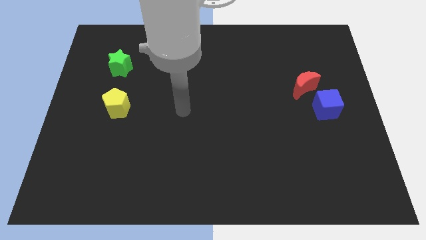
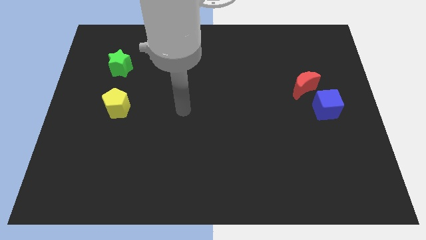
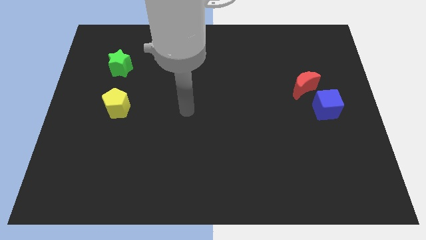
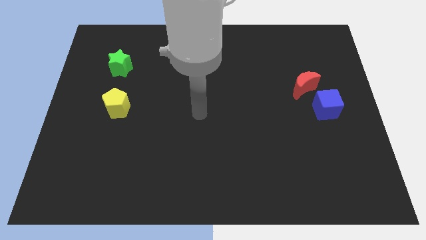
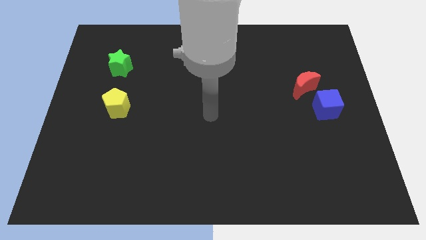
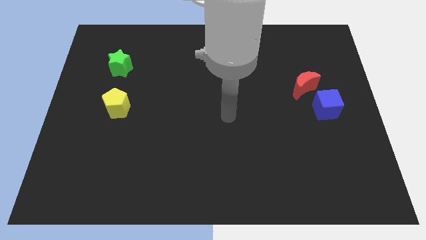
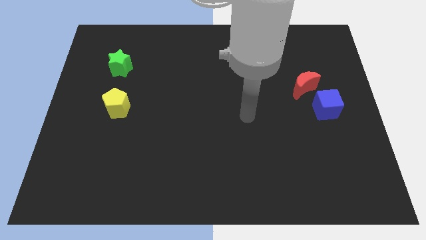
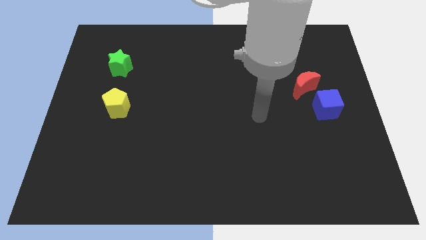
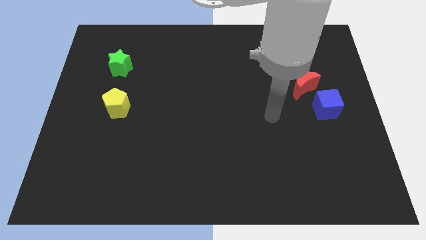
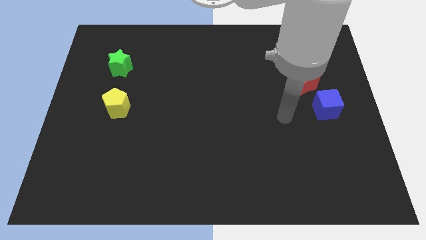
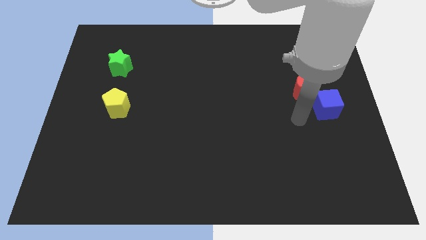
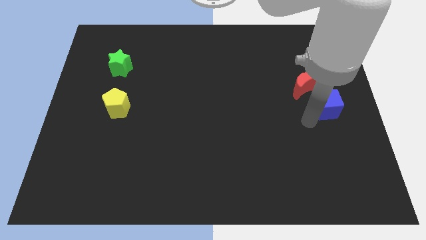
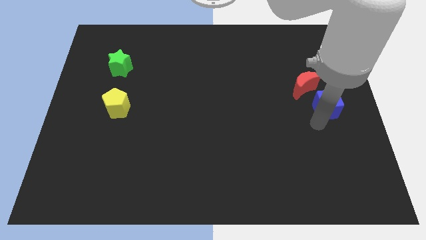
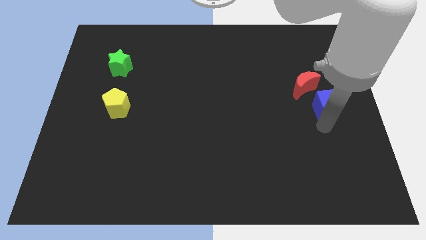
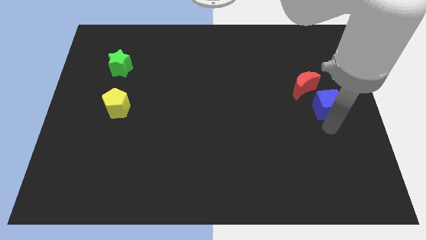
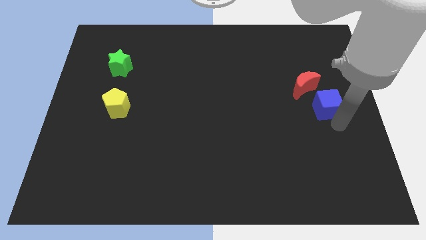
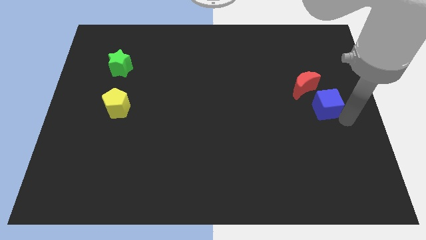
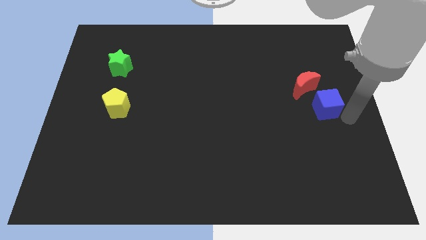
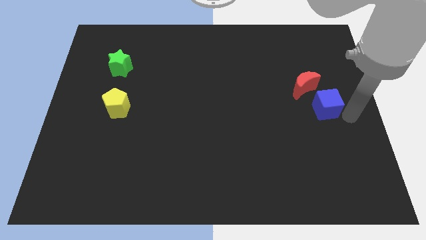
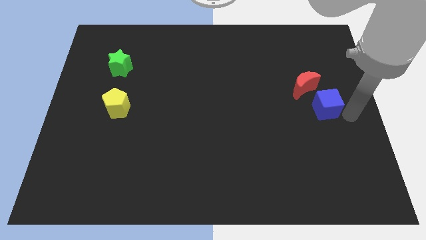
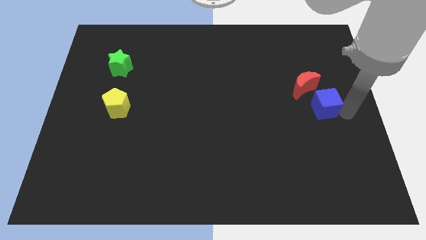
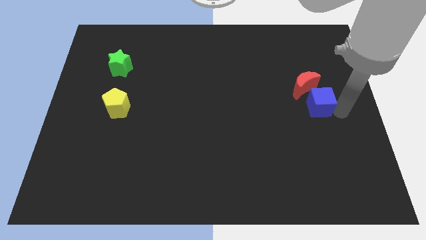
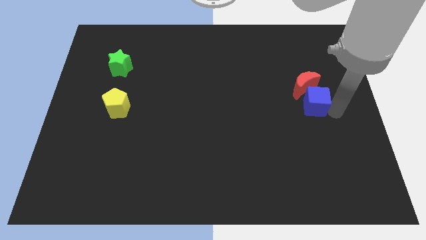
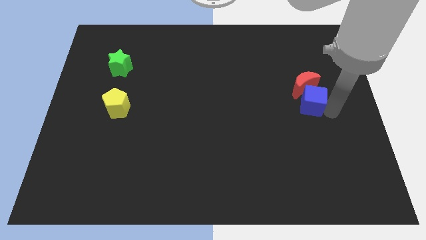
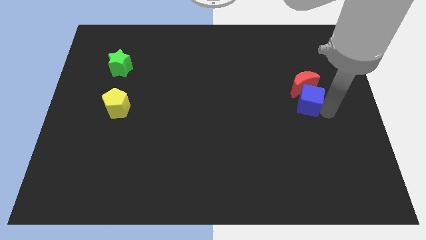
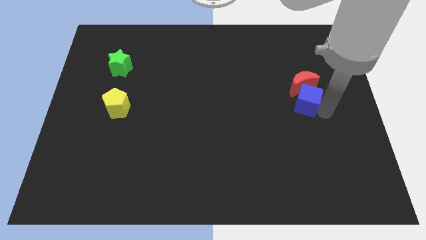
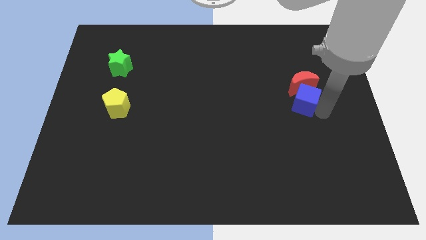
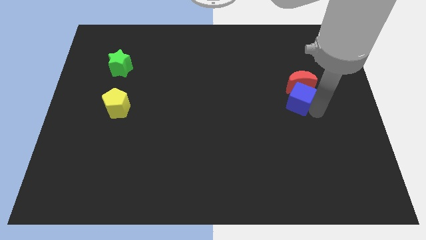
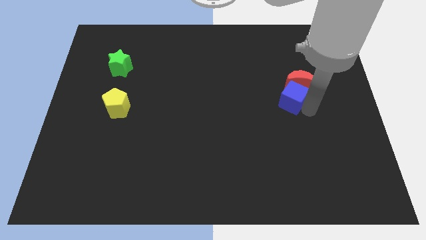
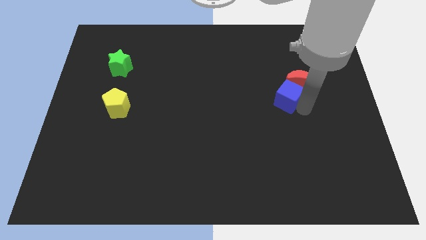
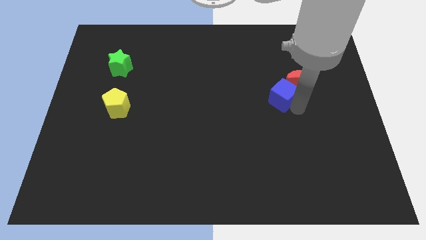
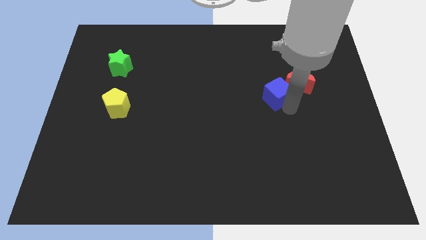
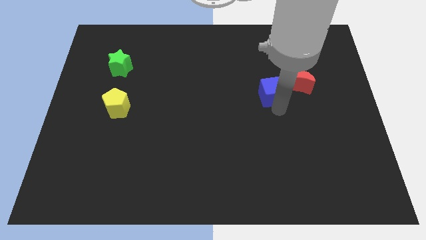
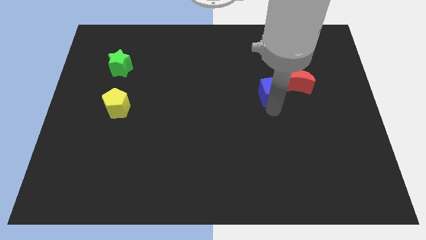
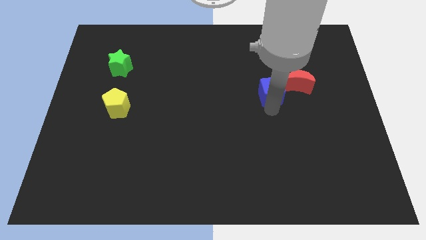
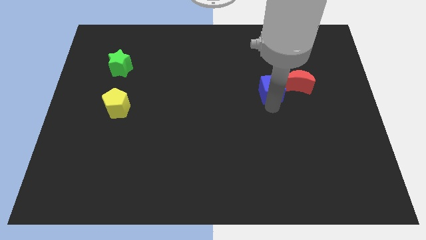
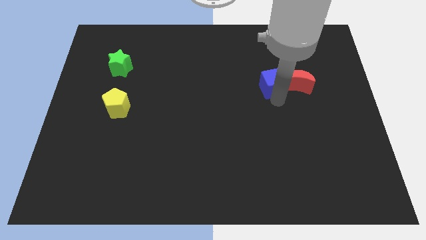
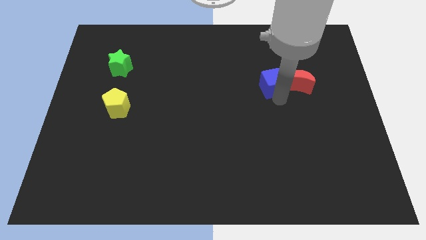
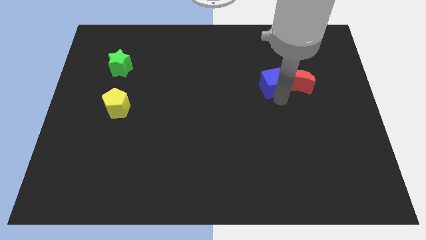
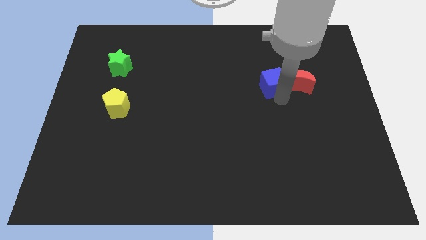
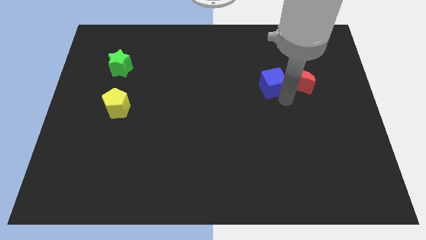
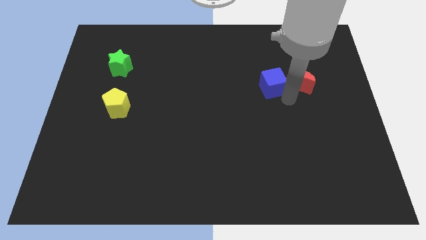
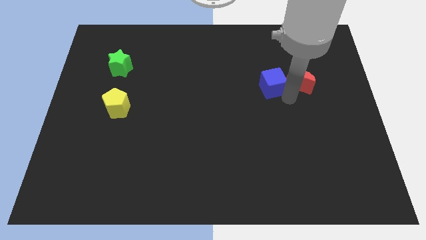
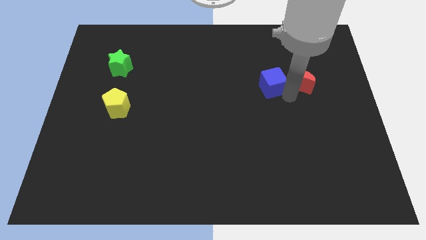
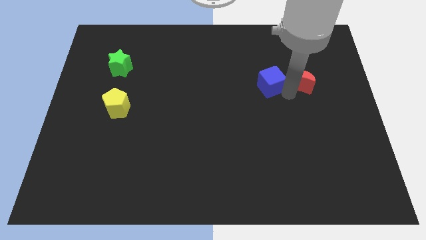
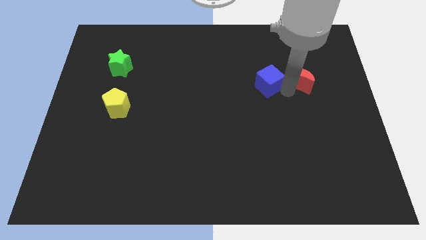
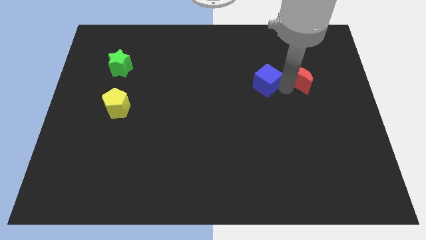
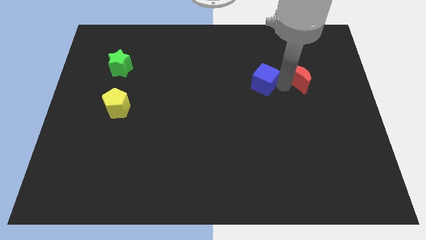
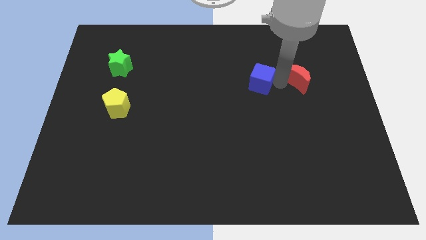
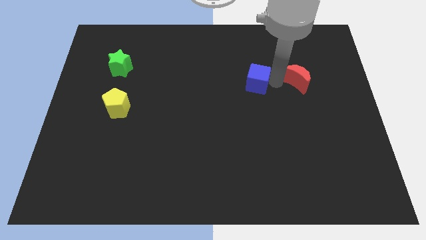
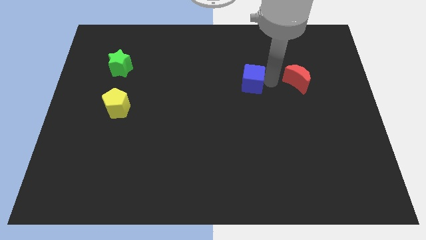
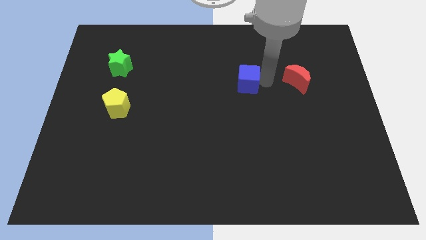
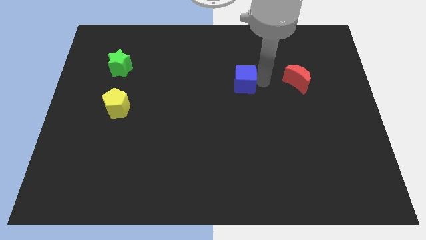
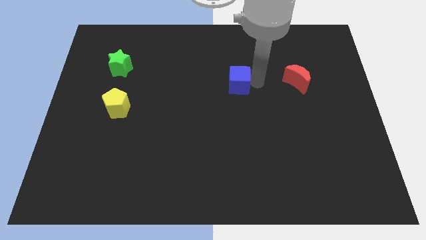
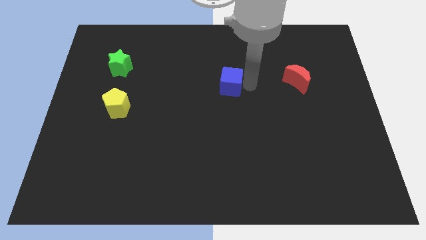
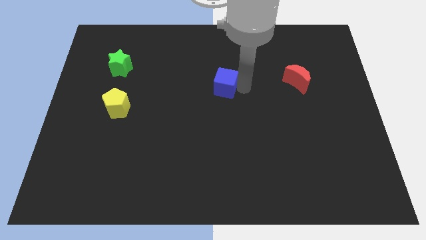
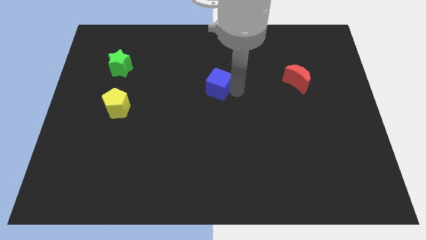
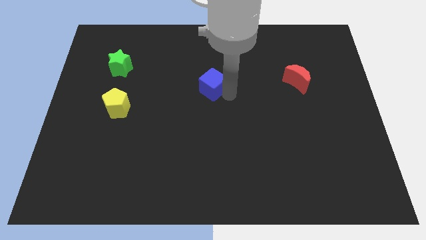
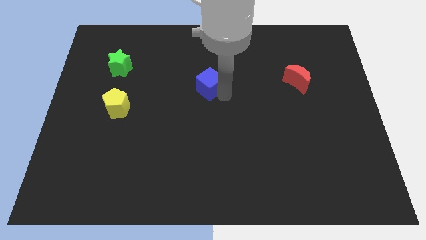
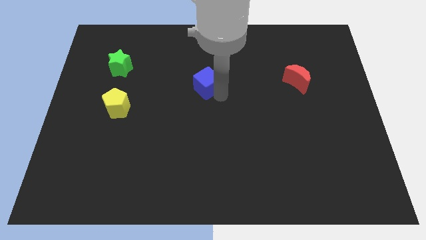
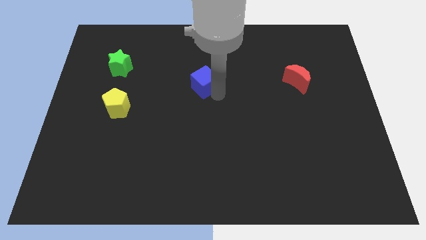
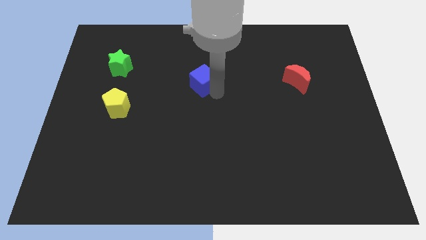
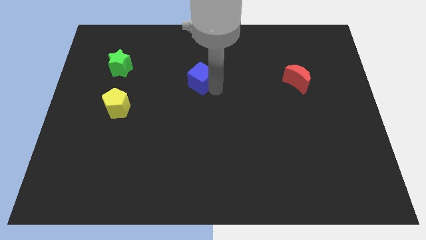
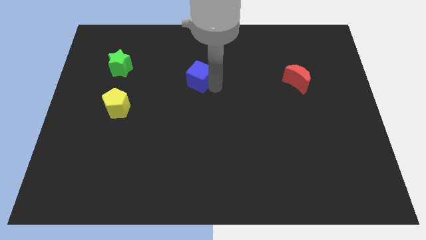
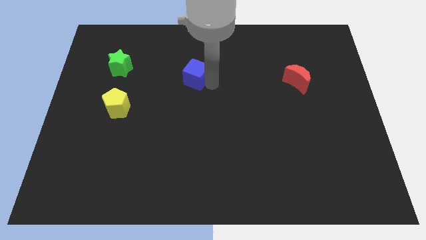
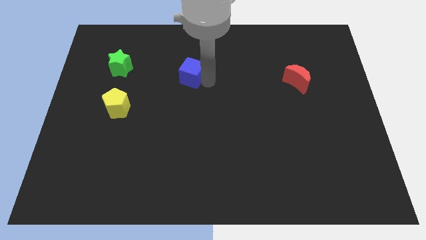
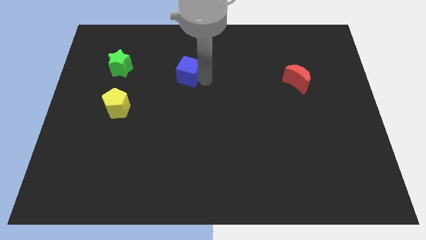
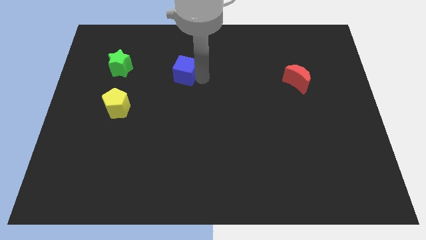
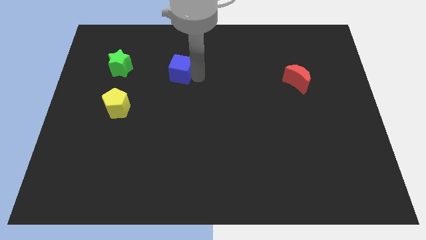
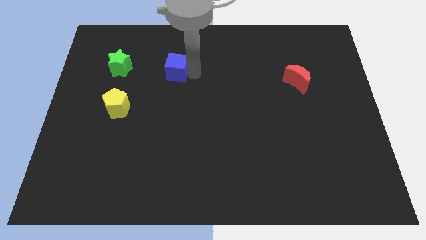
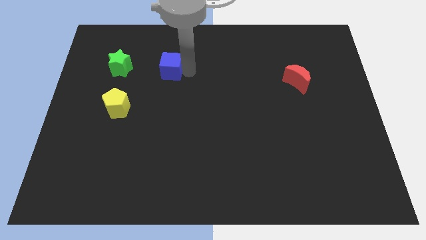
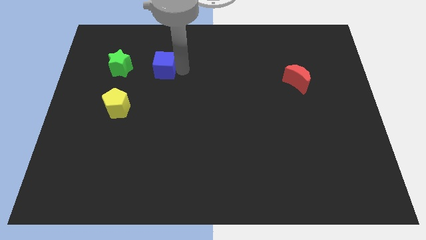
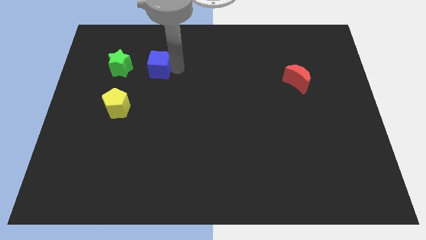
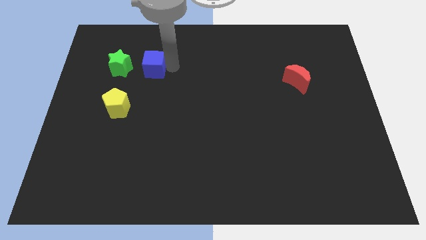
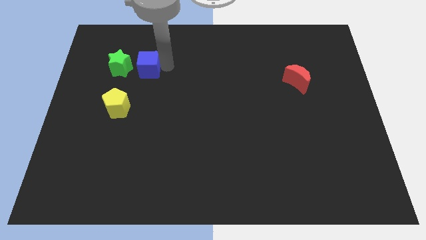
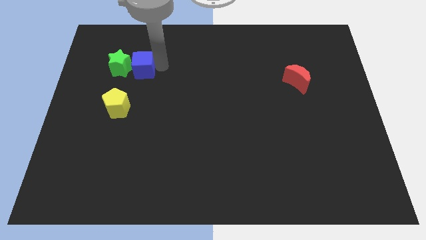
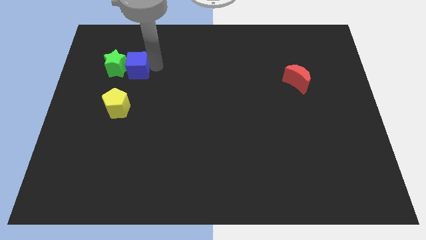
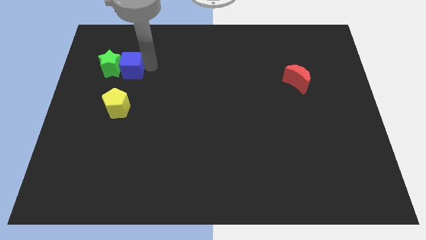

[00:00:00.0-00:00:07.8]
move the blue block next to the green star

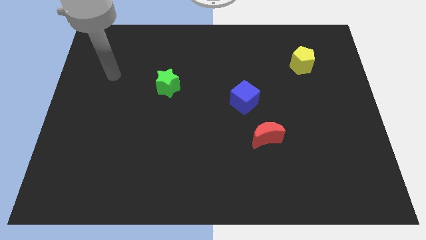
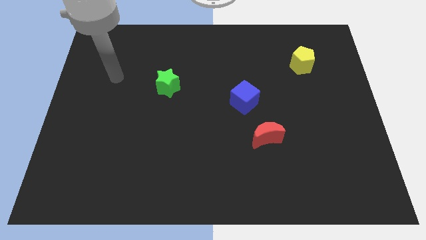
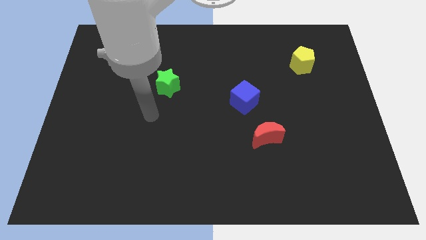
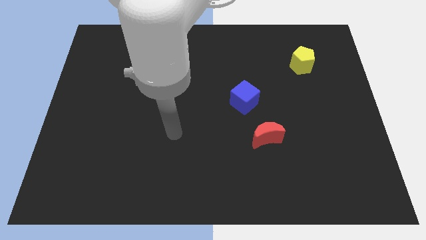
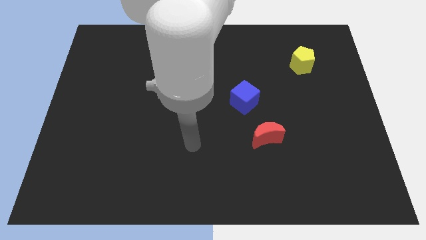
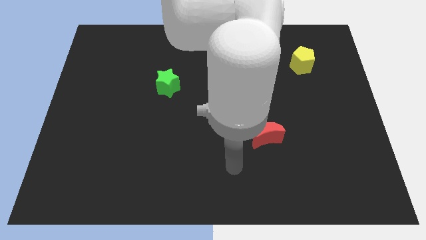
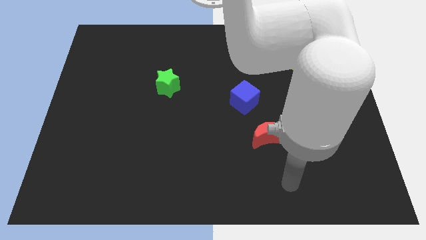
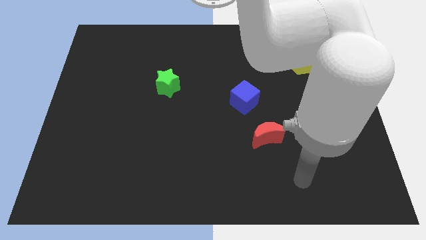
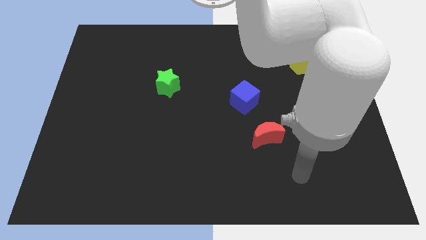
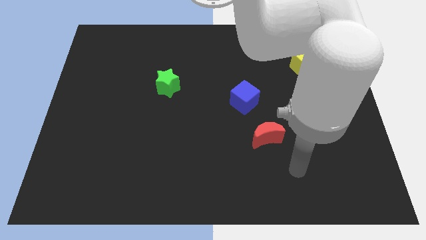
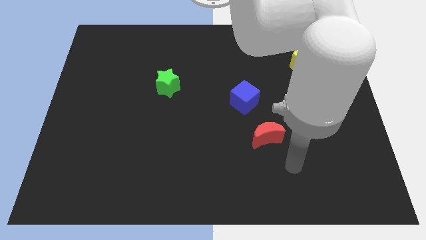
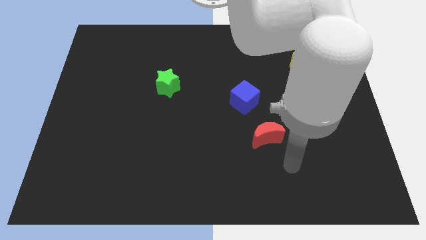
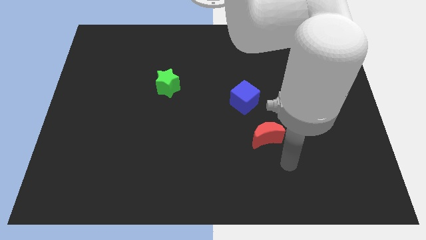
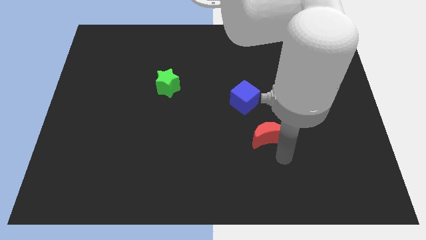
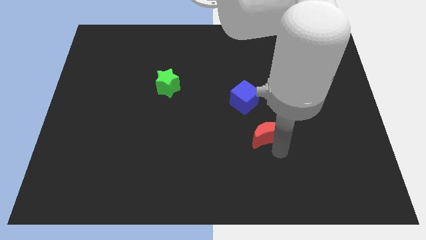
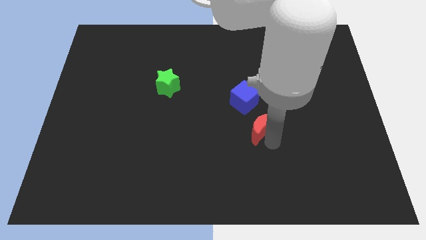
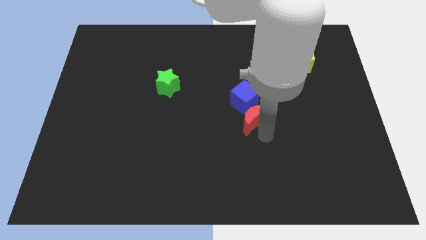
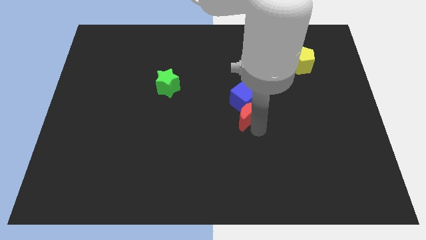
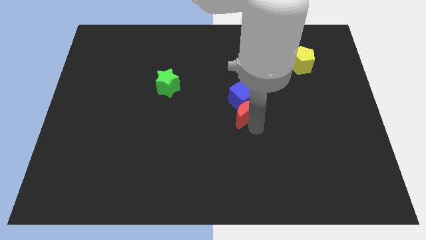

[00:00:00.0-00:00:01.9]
move the red block towards the cube
